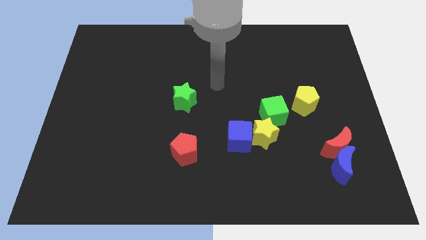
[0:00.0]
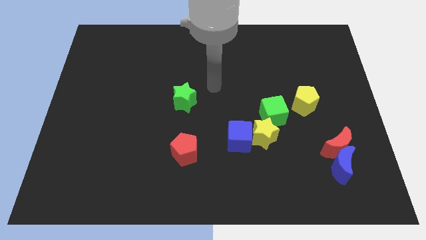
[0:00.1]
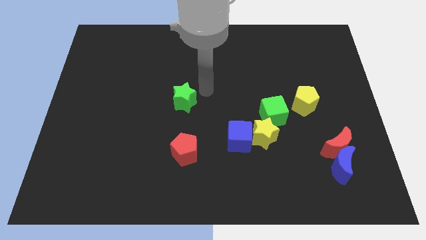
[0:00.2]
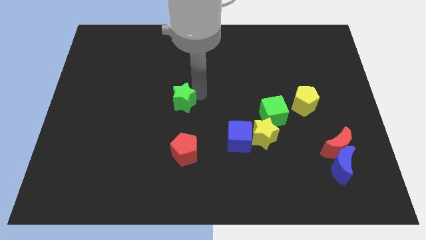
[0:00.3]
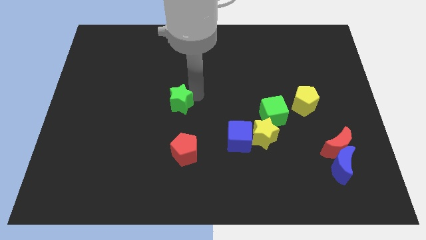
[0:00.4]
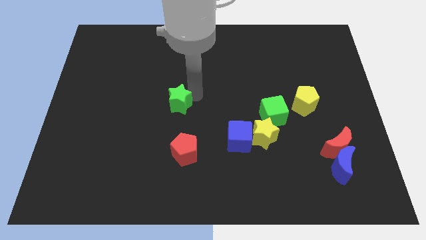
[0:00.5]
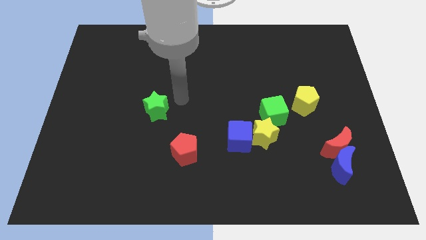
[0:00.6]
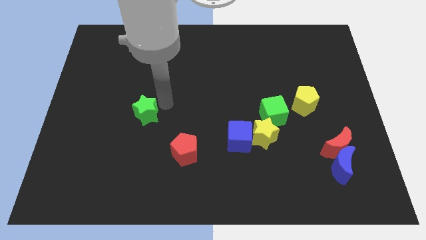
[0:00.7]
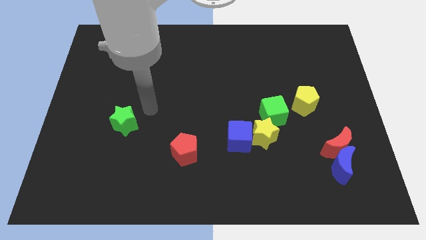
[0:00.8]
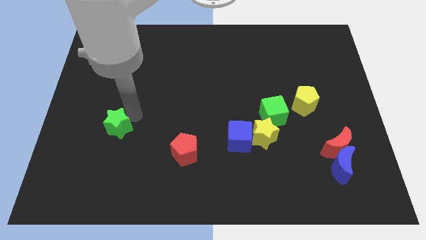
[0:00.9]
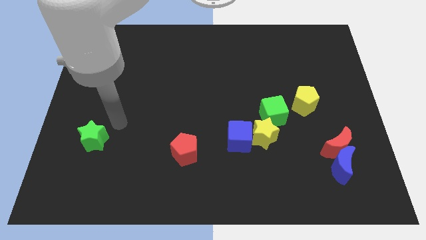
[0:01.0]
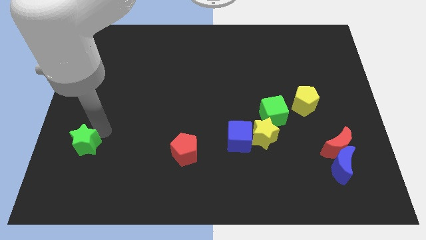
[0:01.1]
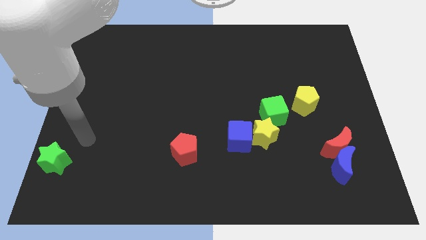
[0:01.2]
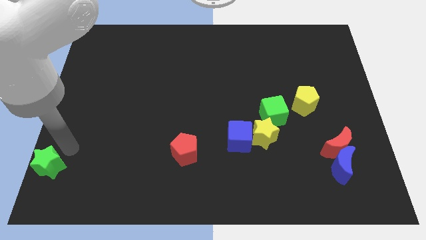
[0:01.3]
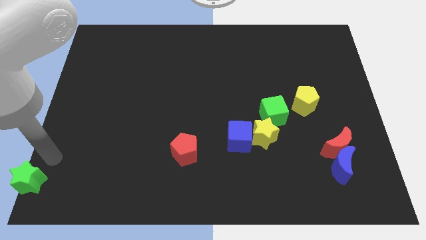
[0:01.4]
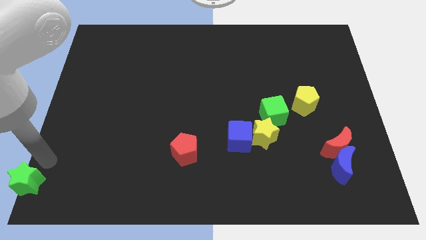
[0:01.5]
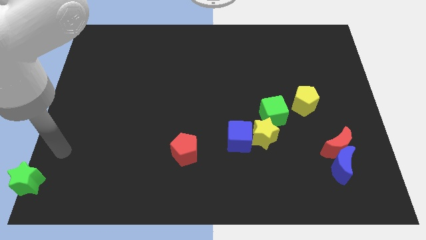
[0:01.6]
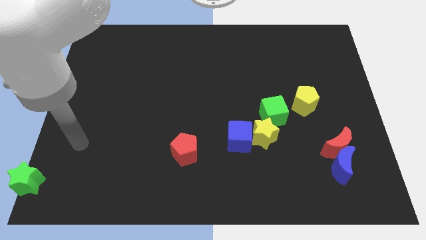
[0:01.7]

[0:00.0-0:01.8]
push the green star towards the bottom left corner of the board

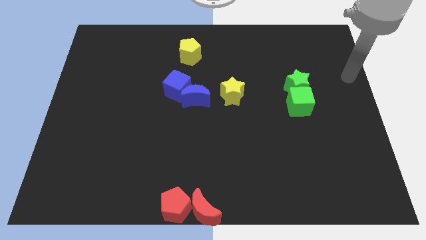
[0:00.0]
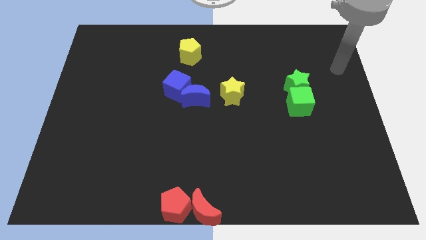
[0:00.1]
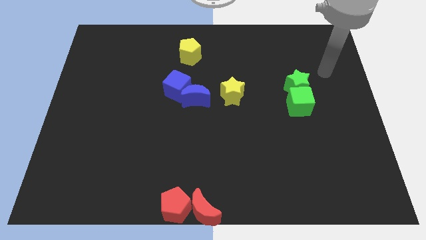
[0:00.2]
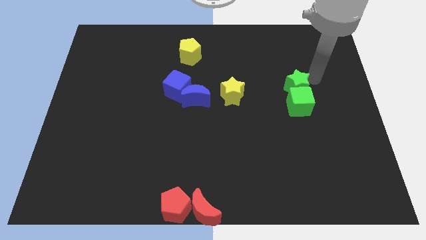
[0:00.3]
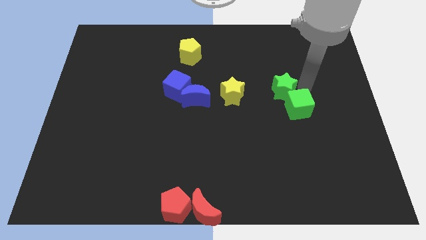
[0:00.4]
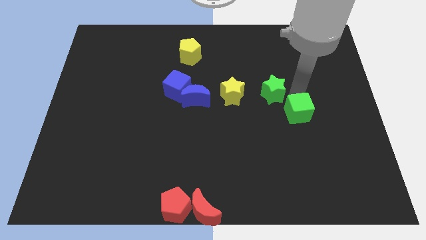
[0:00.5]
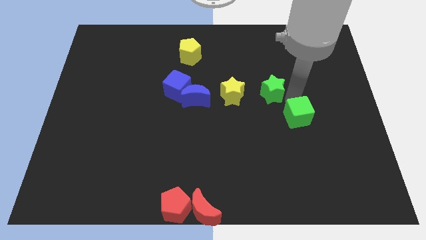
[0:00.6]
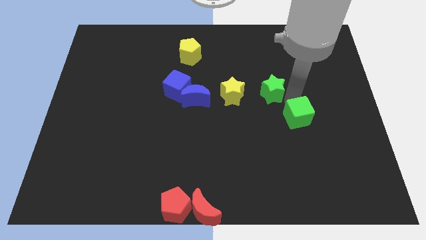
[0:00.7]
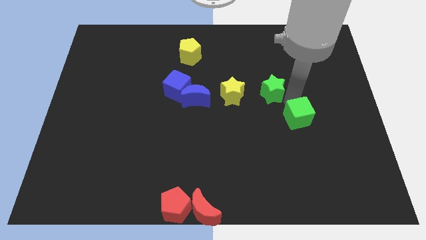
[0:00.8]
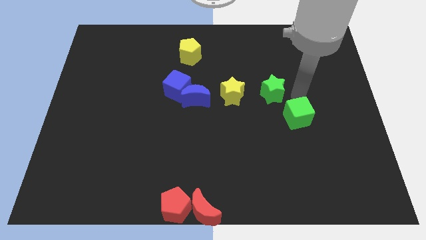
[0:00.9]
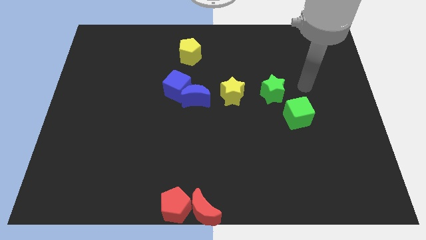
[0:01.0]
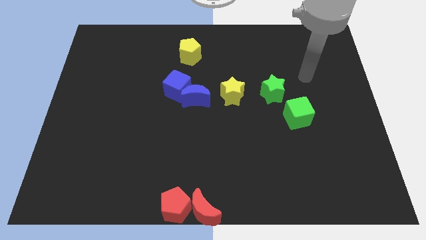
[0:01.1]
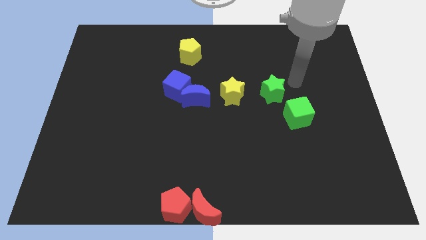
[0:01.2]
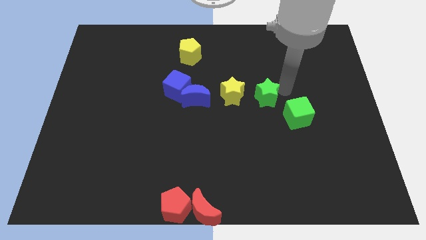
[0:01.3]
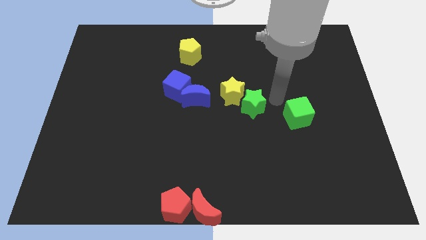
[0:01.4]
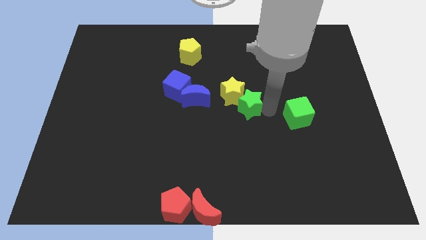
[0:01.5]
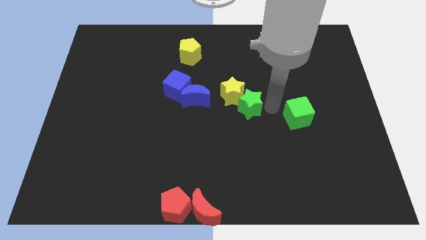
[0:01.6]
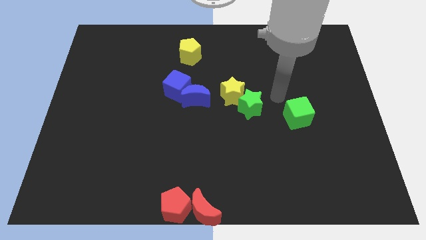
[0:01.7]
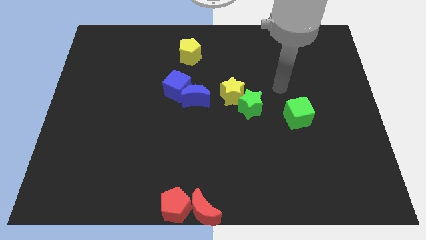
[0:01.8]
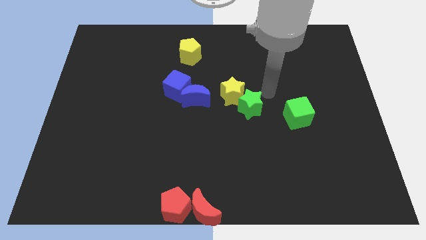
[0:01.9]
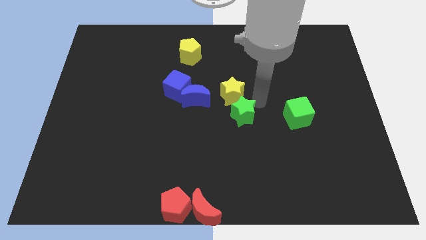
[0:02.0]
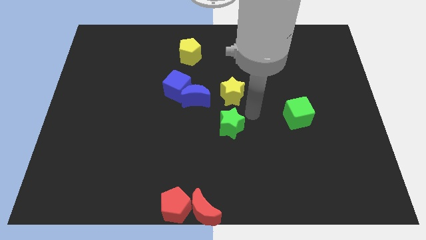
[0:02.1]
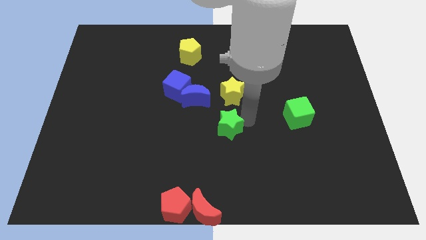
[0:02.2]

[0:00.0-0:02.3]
separate the green star below the yellow star

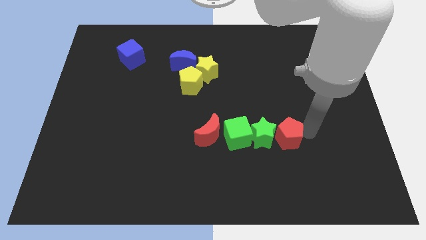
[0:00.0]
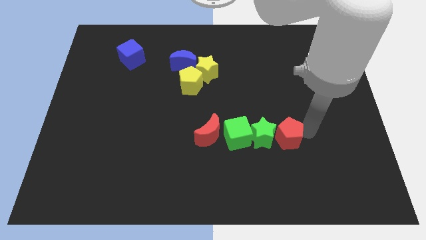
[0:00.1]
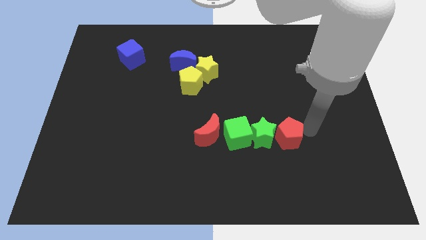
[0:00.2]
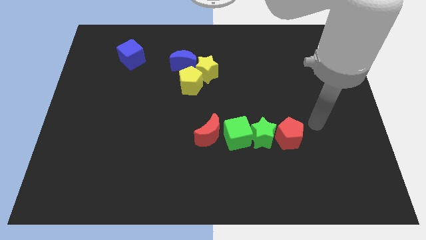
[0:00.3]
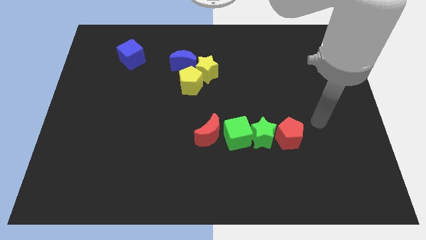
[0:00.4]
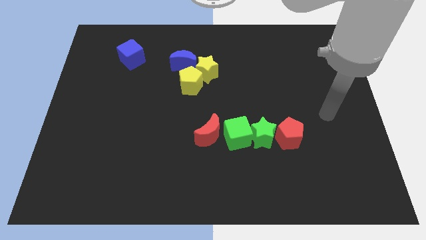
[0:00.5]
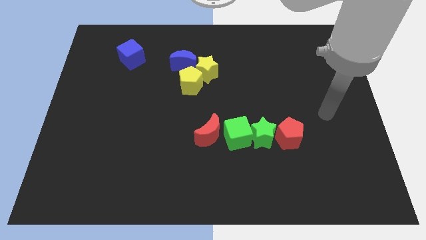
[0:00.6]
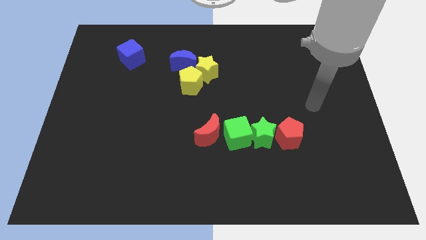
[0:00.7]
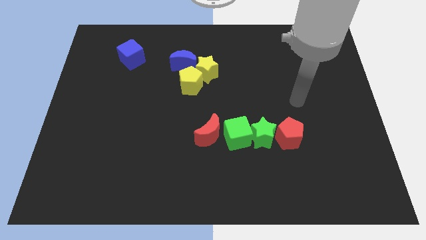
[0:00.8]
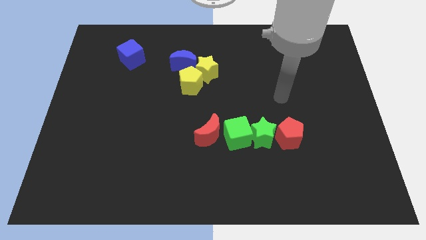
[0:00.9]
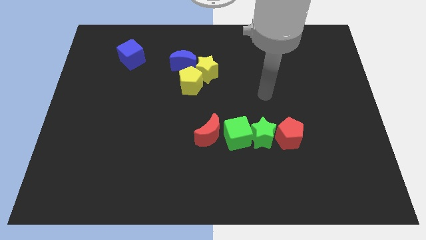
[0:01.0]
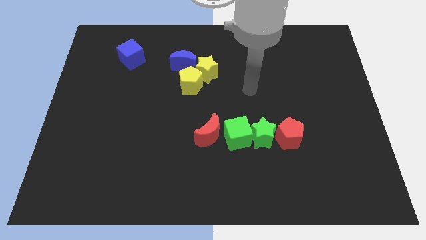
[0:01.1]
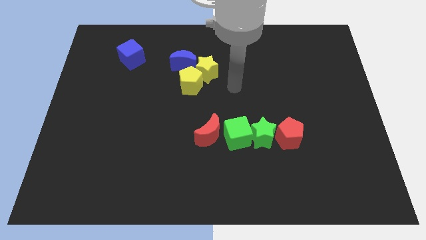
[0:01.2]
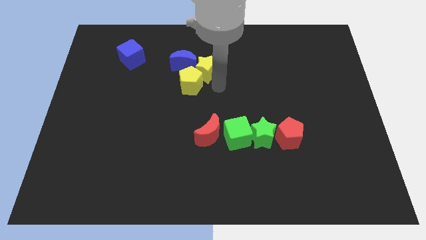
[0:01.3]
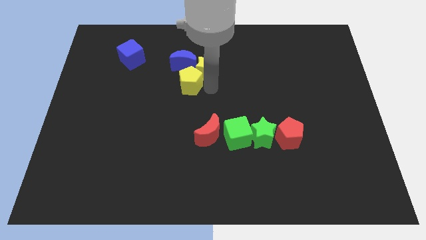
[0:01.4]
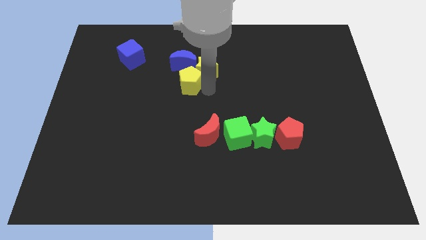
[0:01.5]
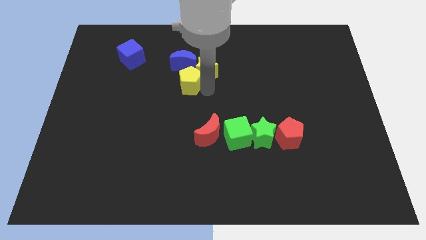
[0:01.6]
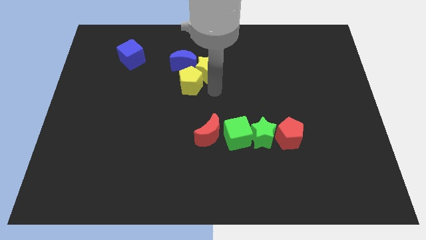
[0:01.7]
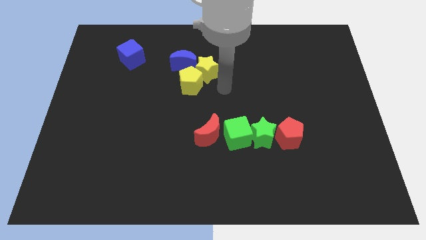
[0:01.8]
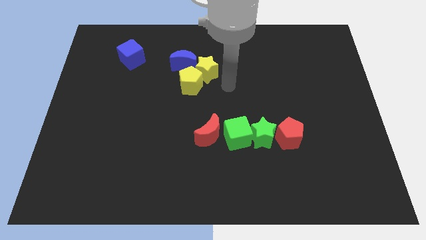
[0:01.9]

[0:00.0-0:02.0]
go away from the red pentagon

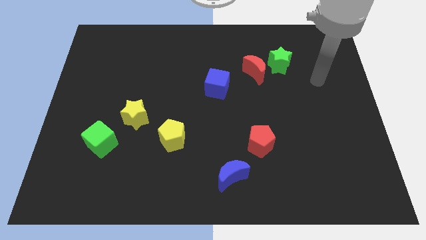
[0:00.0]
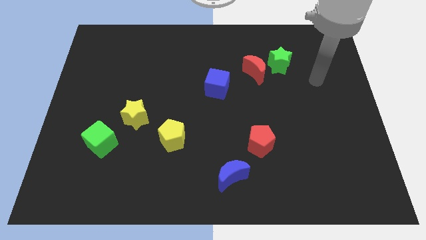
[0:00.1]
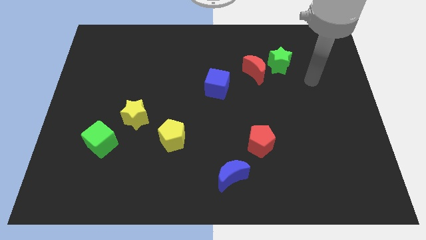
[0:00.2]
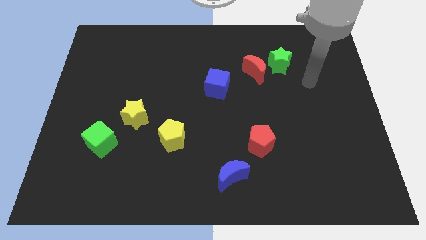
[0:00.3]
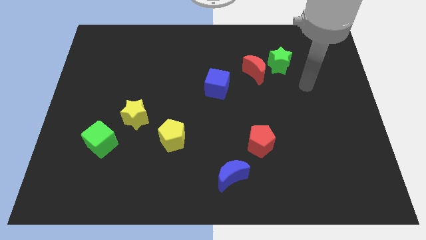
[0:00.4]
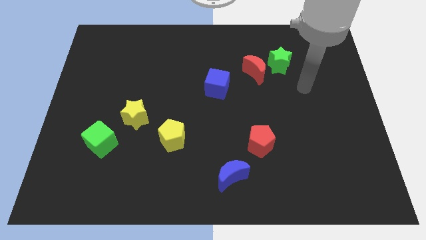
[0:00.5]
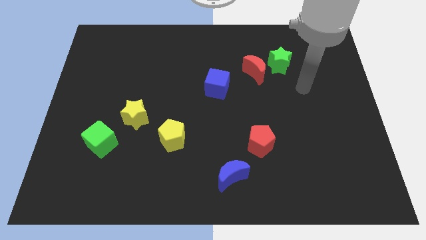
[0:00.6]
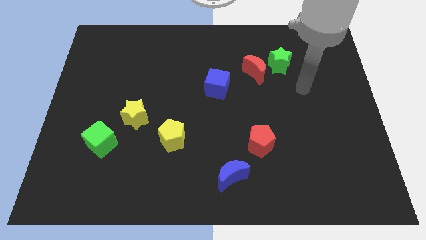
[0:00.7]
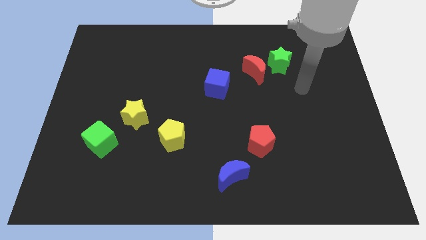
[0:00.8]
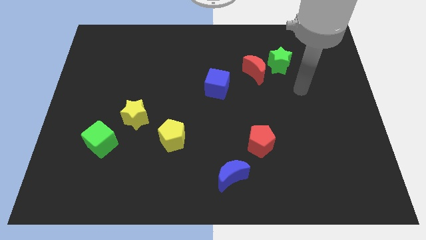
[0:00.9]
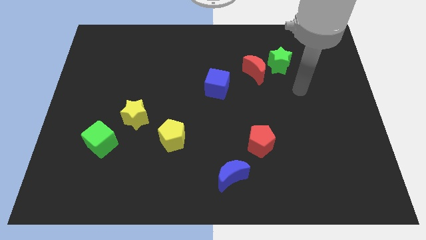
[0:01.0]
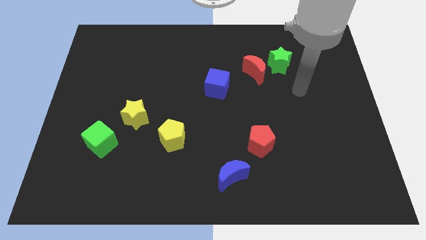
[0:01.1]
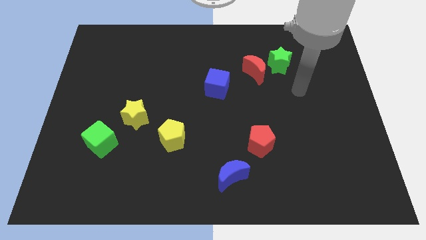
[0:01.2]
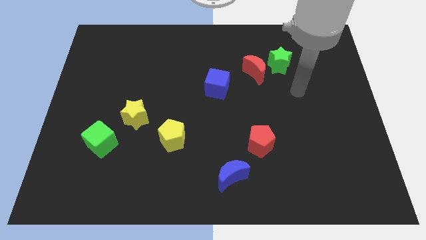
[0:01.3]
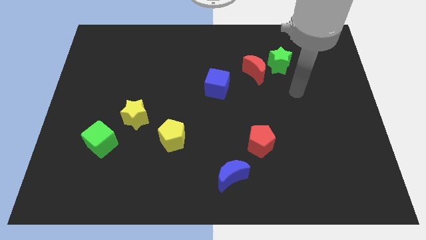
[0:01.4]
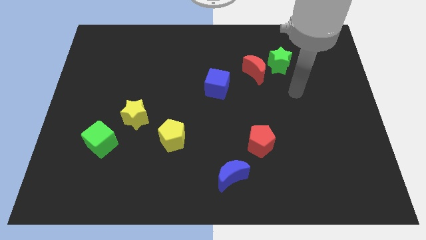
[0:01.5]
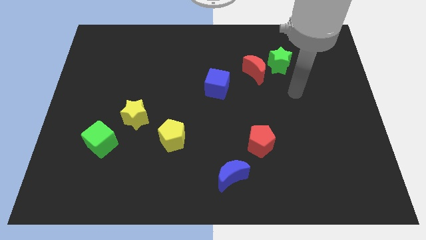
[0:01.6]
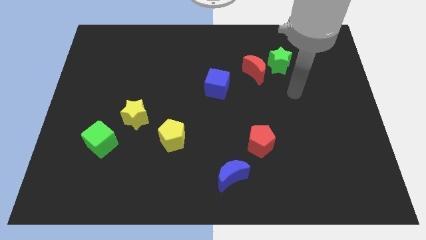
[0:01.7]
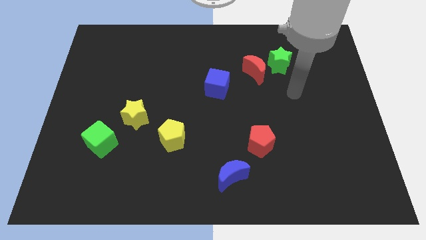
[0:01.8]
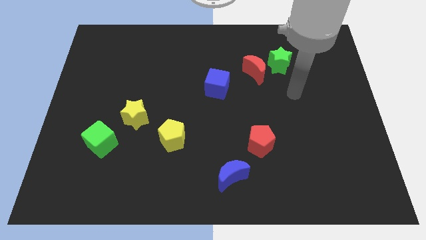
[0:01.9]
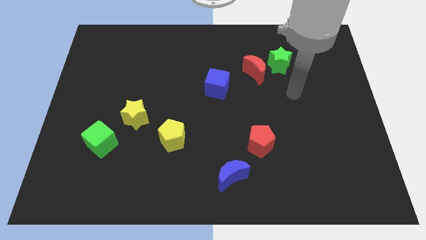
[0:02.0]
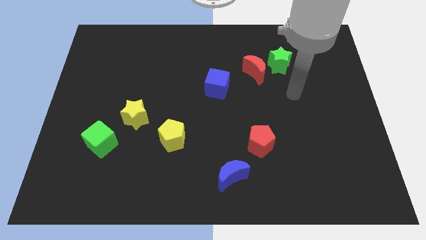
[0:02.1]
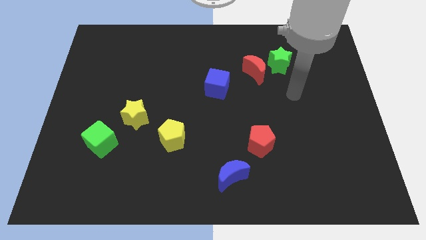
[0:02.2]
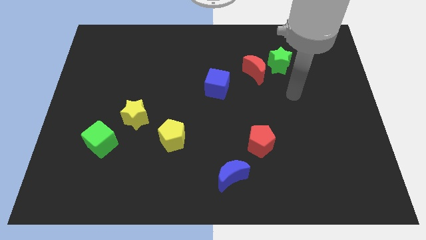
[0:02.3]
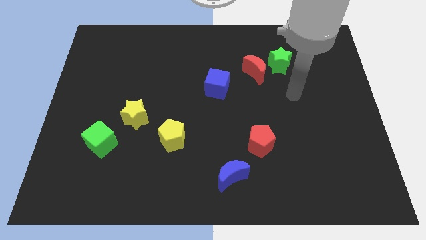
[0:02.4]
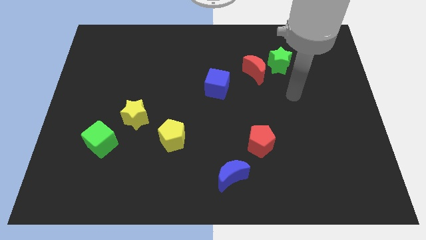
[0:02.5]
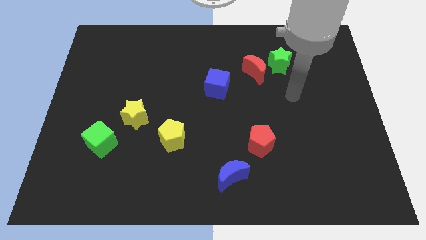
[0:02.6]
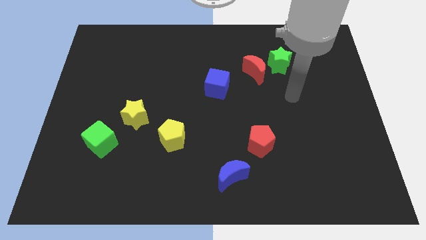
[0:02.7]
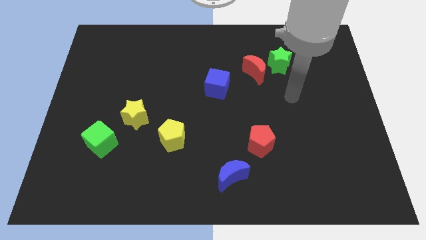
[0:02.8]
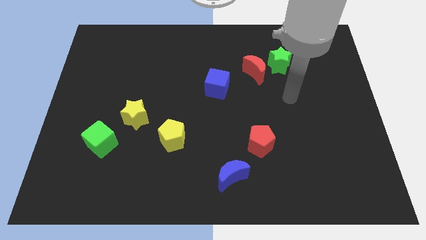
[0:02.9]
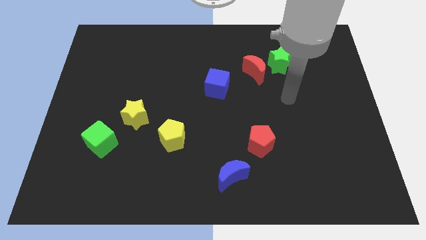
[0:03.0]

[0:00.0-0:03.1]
move the arm to the bottom of the green star
